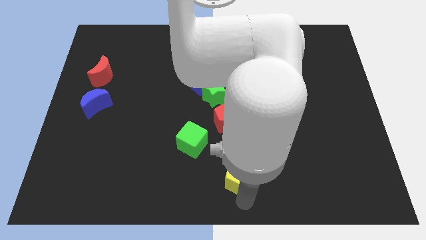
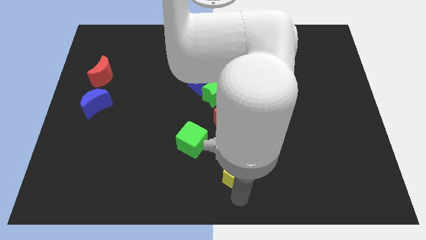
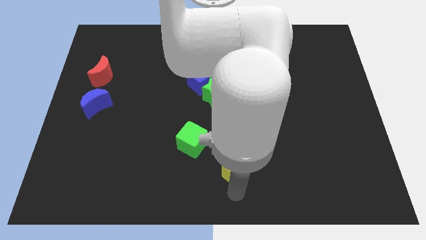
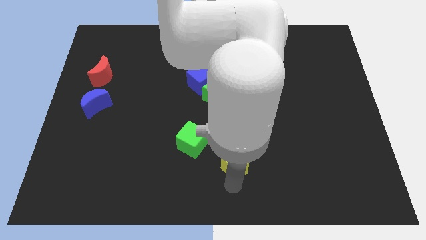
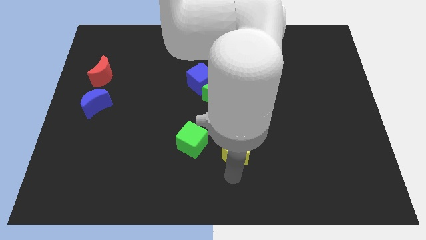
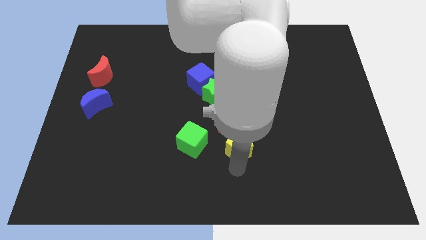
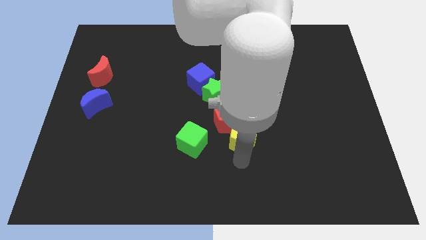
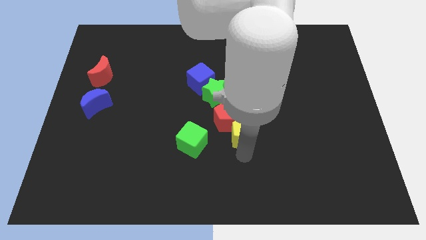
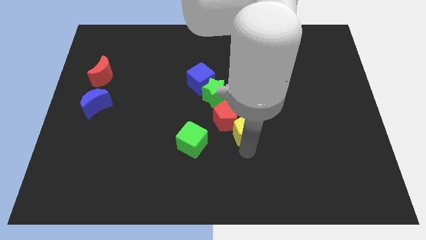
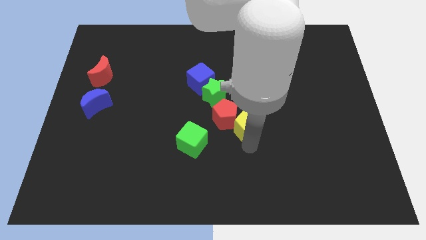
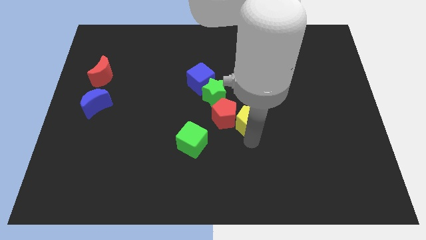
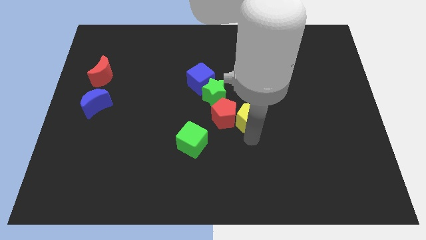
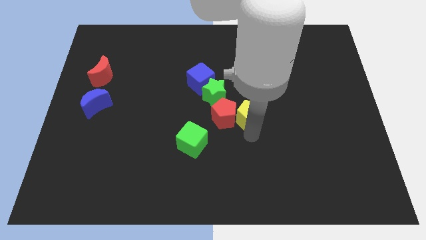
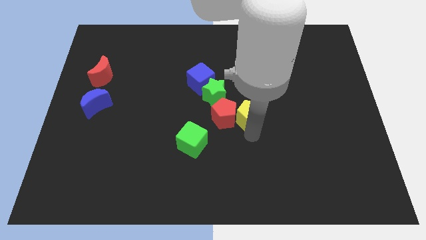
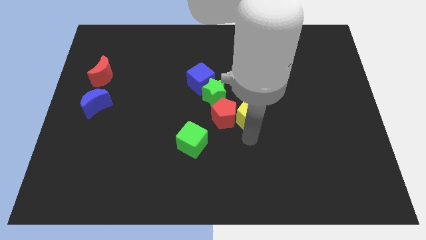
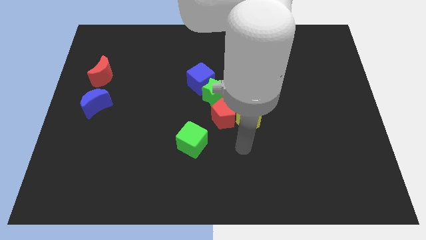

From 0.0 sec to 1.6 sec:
move the yellow pentagon to the right side of the red pentagon

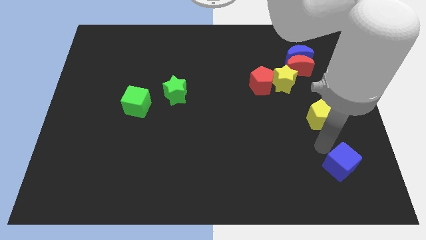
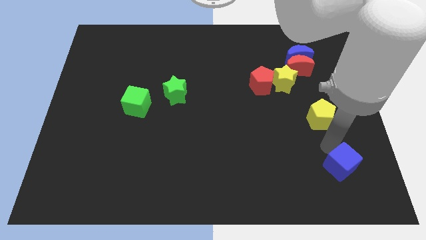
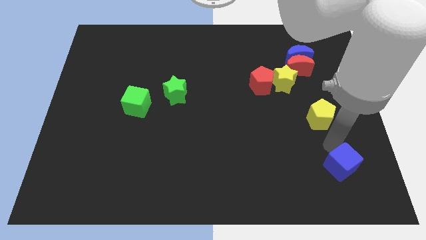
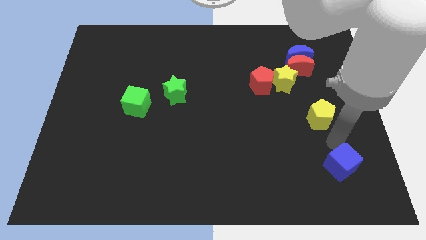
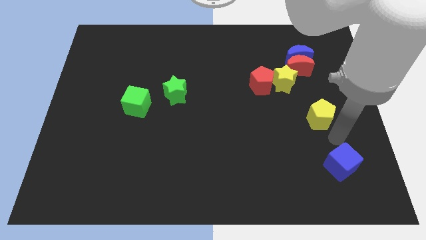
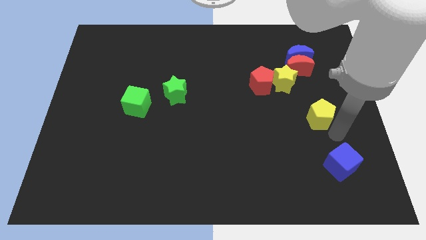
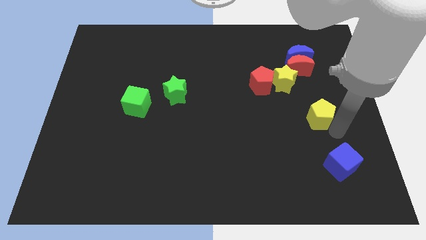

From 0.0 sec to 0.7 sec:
move slightly blue cube

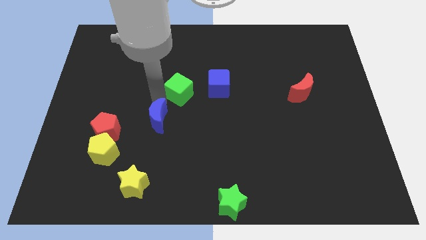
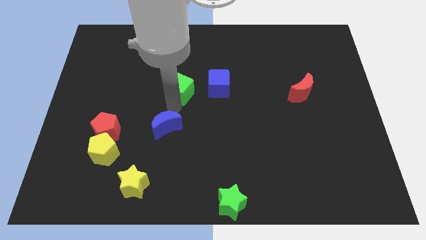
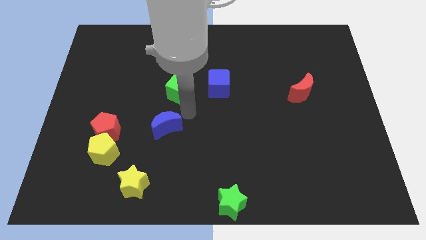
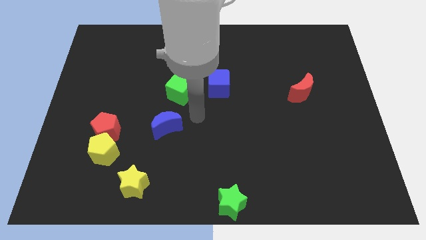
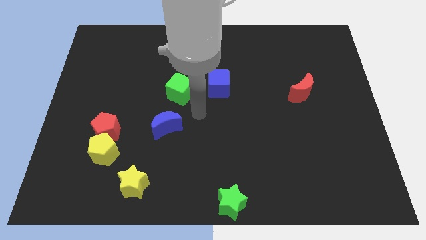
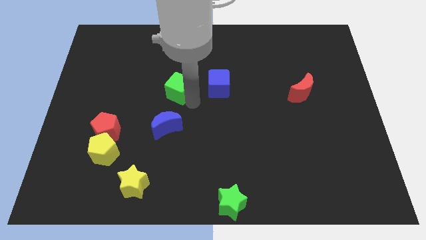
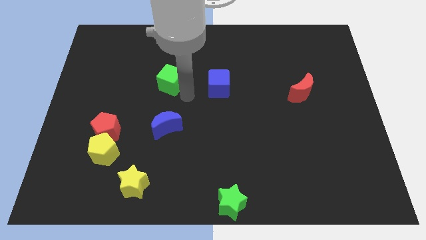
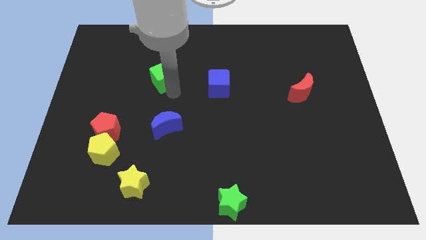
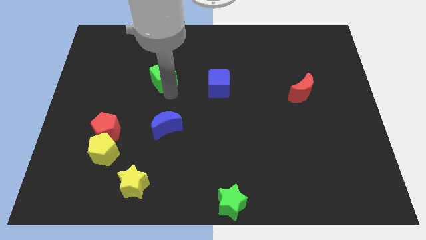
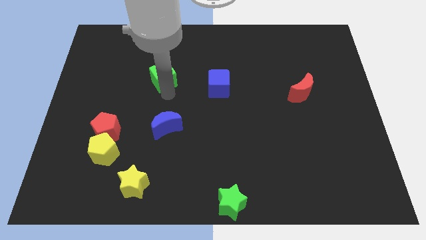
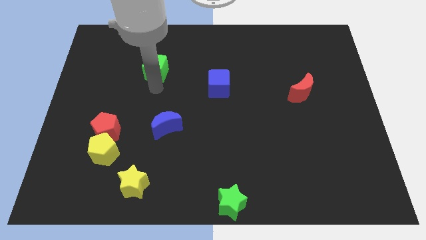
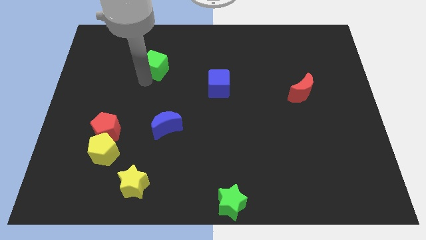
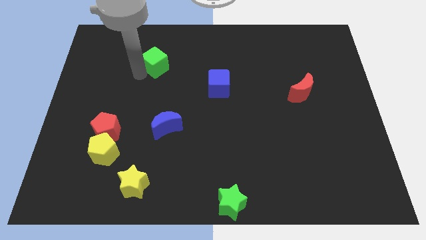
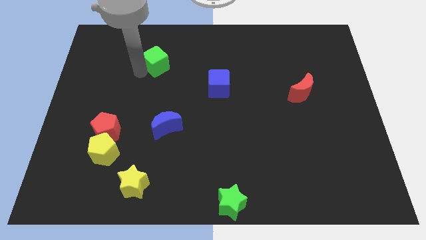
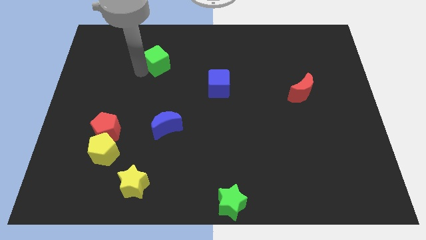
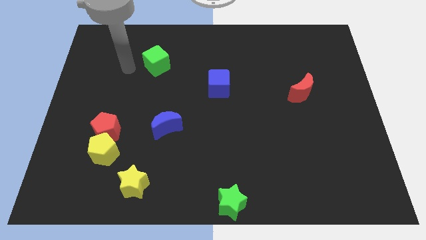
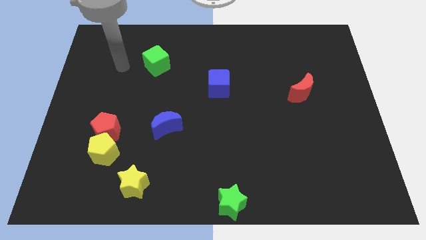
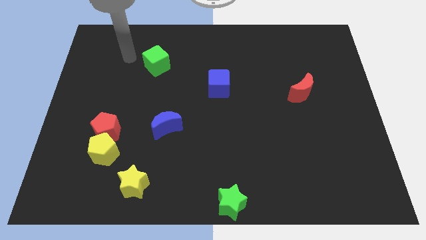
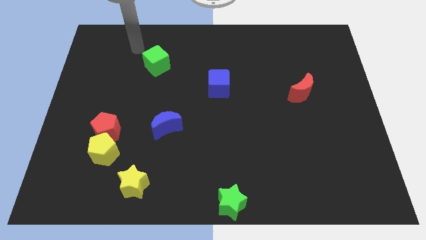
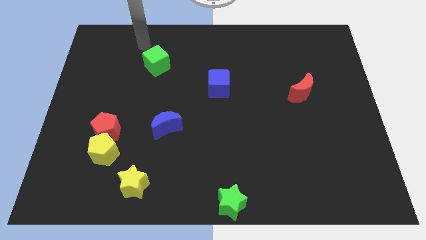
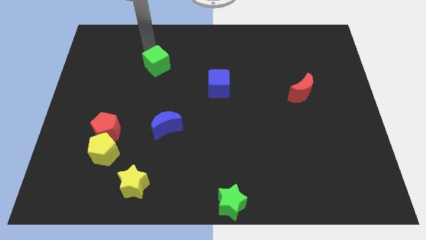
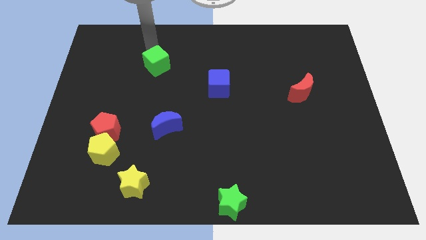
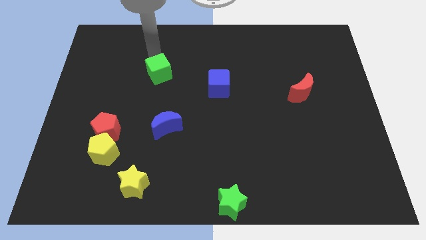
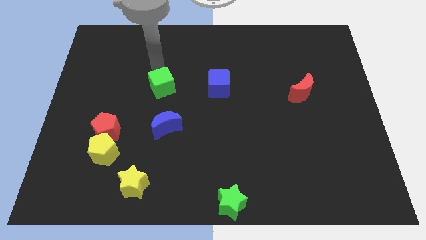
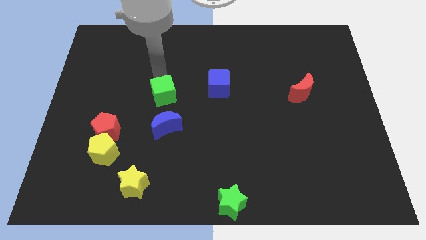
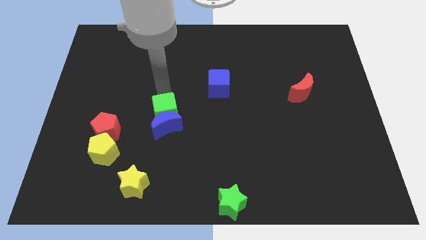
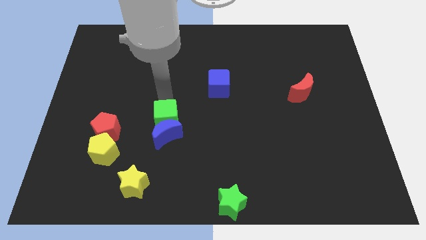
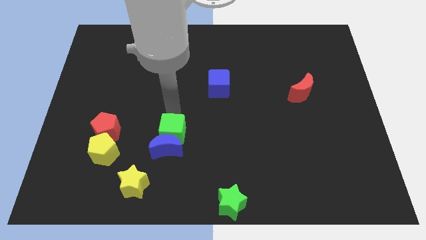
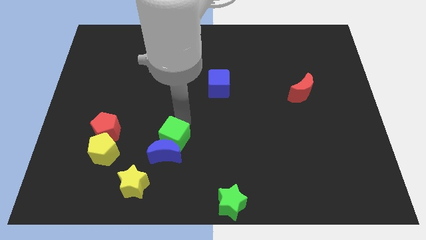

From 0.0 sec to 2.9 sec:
move the green cube on top into blue moon

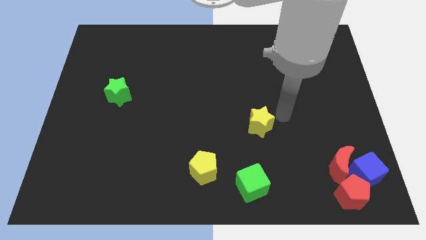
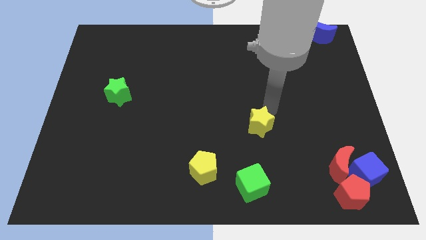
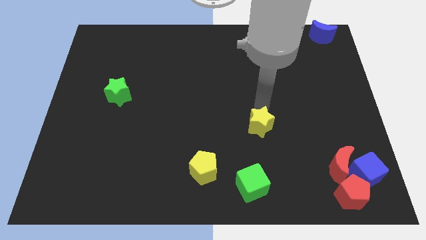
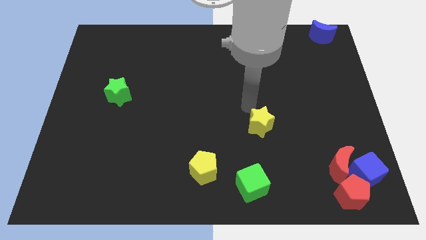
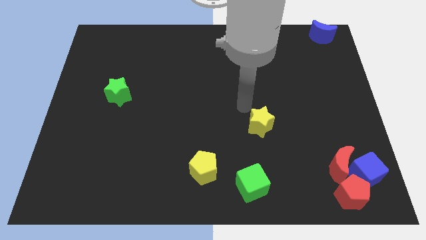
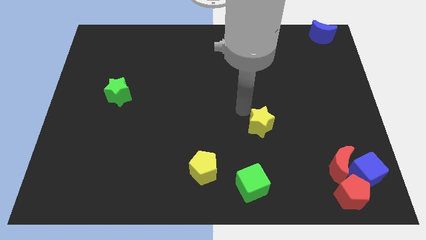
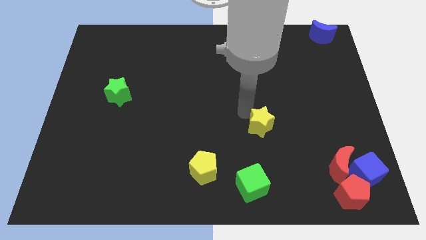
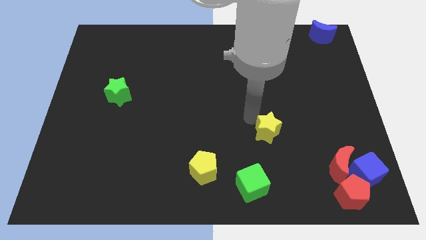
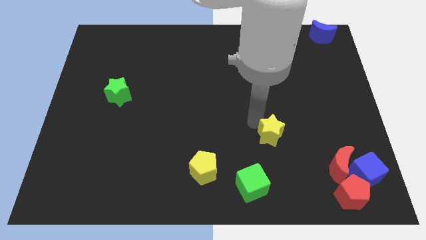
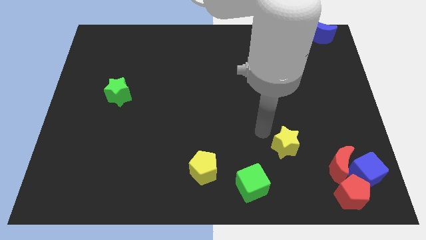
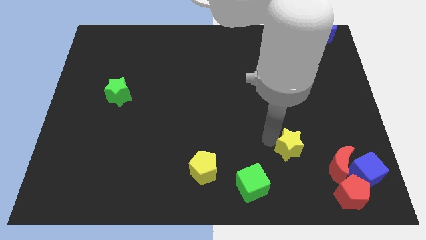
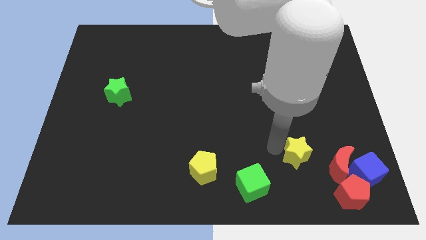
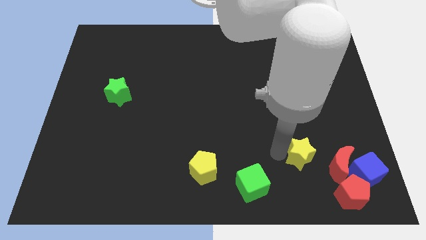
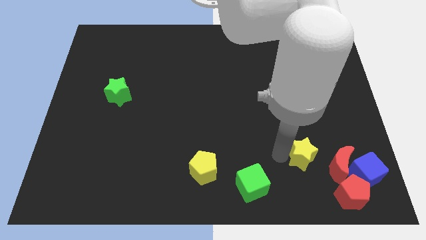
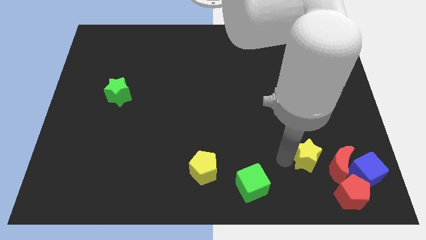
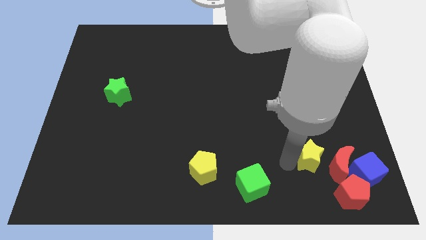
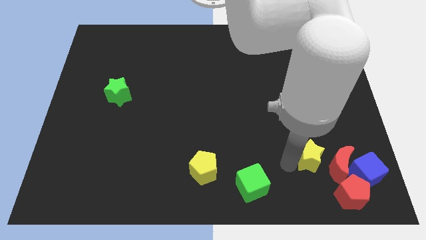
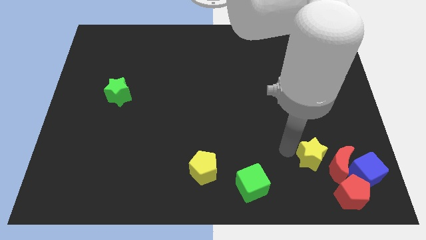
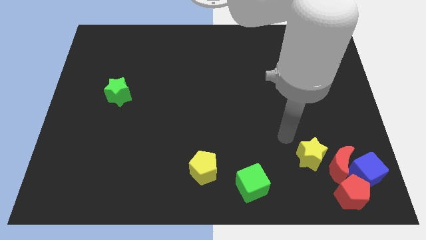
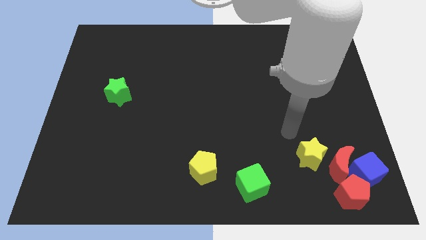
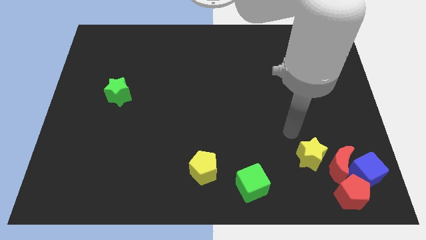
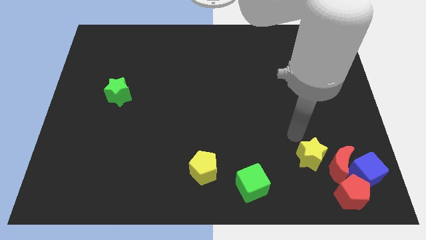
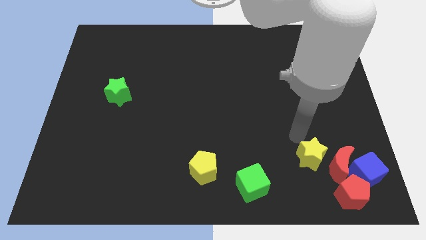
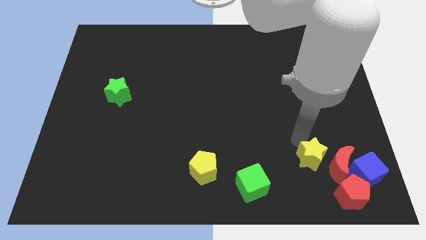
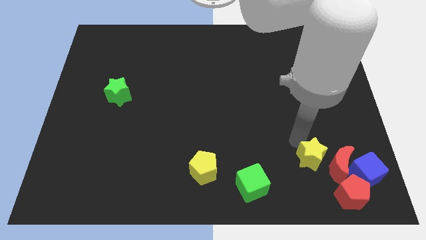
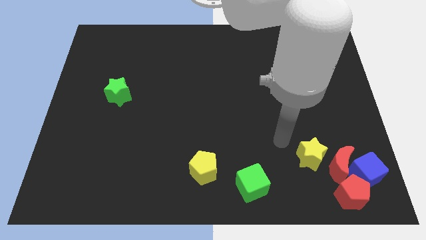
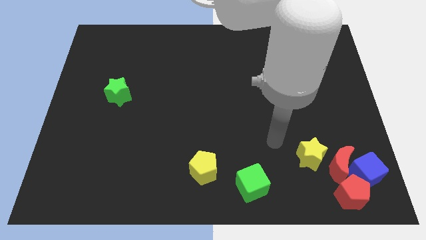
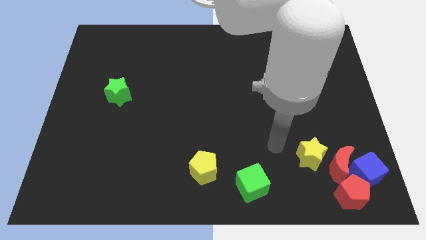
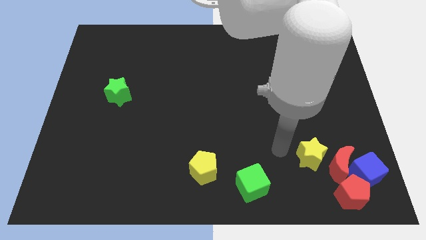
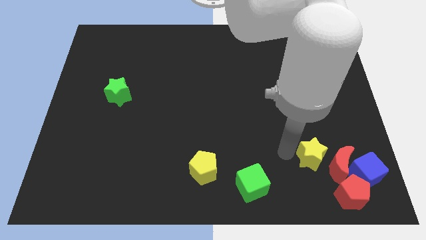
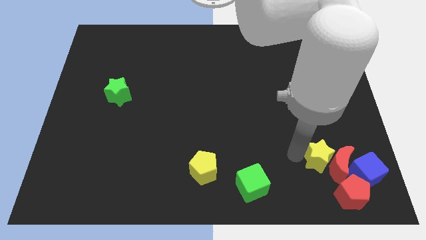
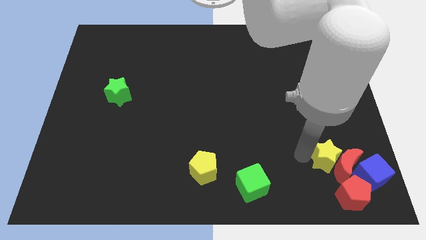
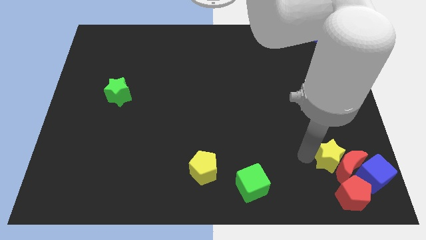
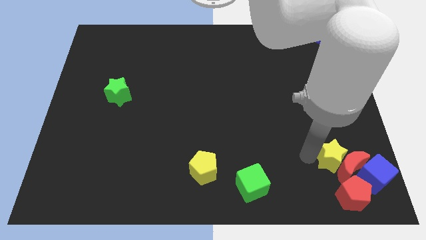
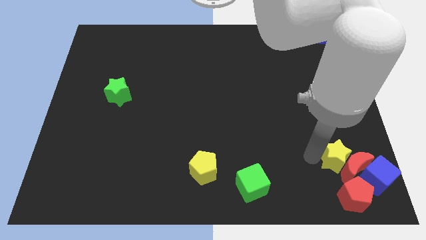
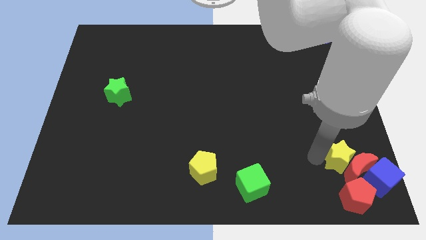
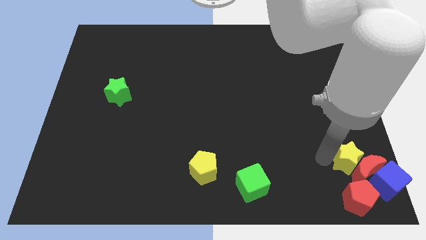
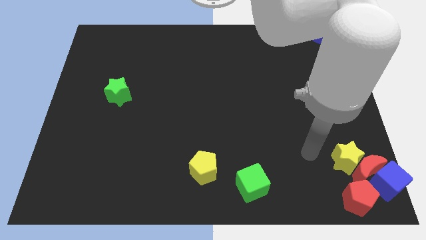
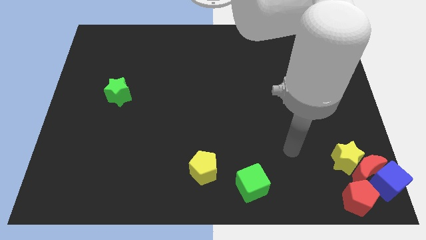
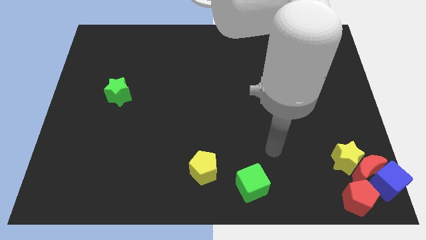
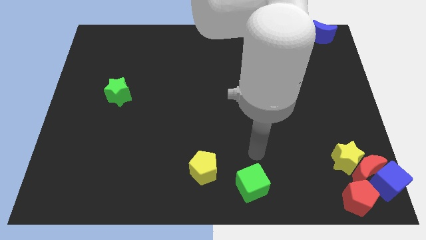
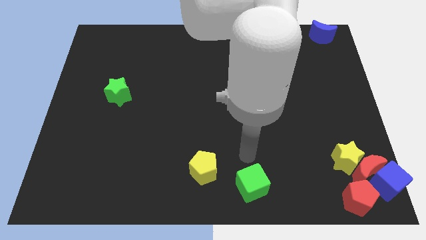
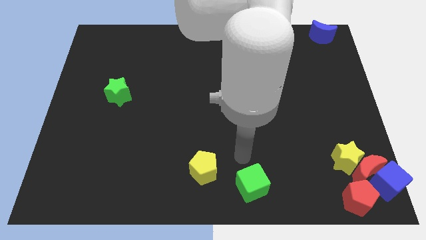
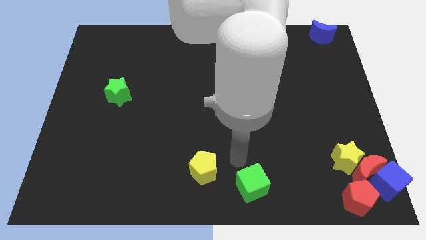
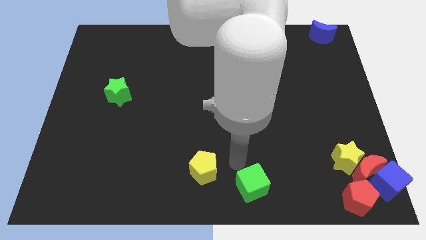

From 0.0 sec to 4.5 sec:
push the yellow star into the red crescent
